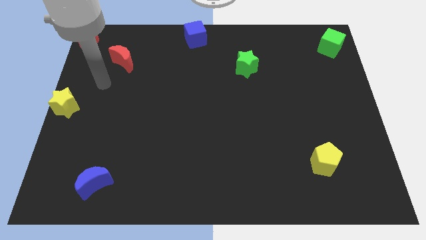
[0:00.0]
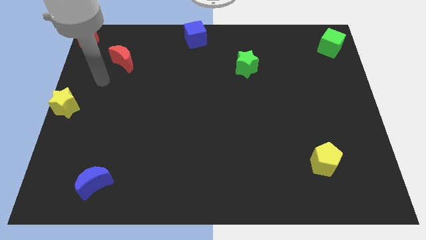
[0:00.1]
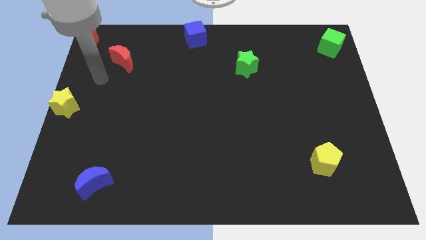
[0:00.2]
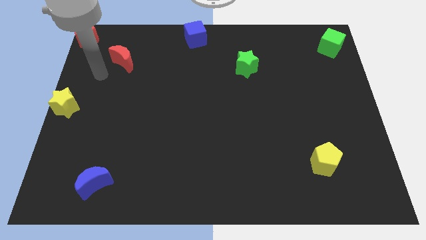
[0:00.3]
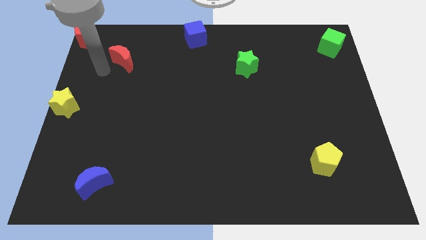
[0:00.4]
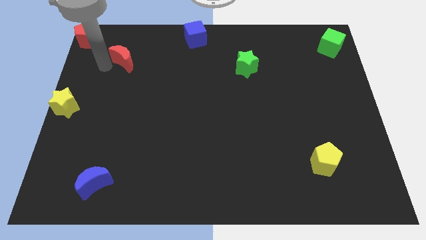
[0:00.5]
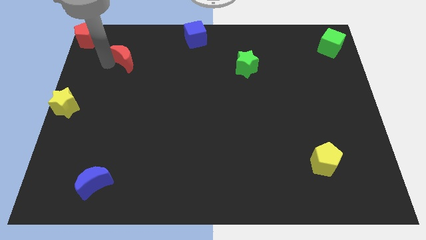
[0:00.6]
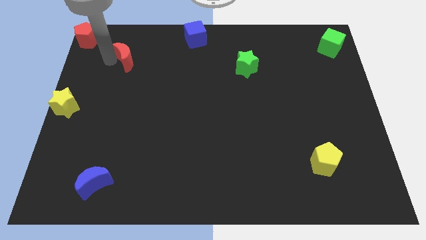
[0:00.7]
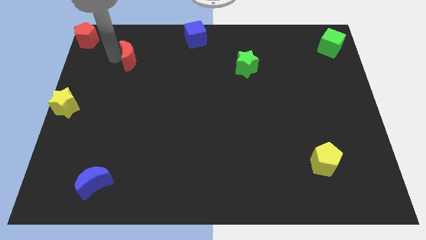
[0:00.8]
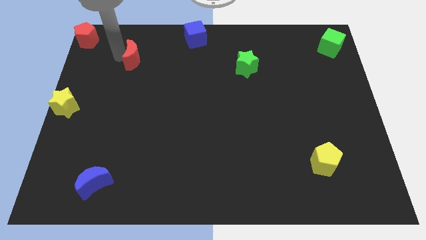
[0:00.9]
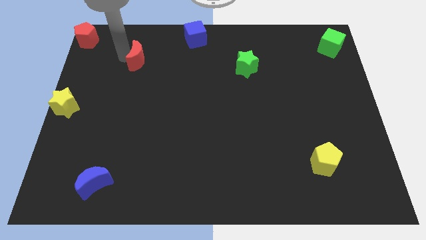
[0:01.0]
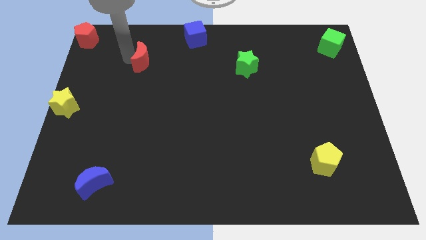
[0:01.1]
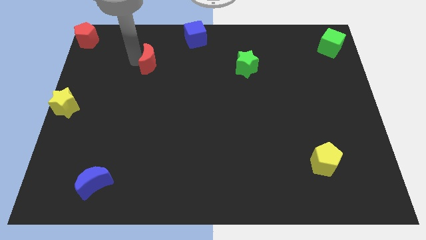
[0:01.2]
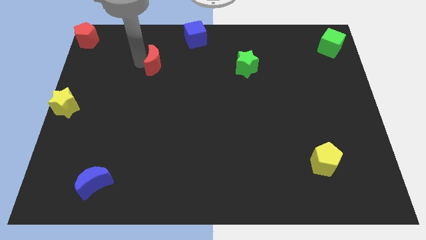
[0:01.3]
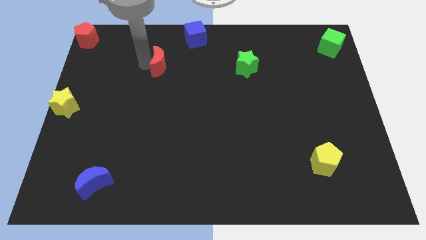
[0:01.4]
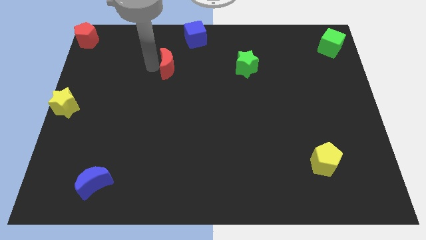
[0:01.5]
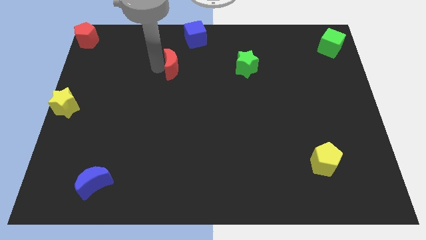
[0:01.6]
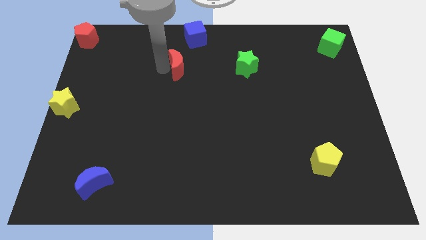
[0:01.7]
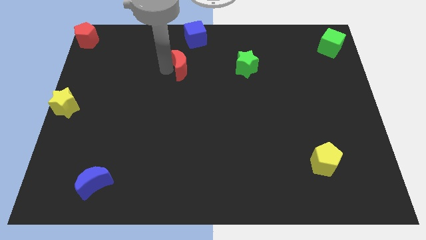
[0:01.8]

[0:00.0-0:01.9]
push the red crescent towards the green star

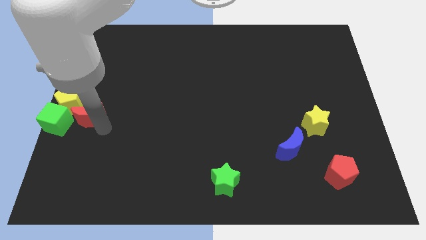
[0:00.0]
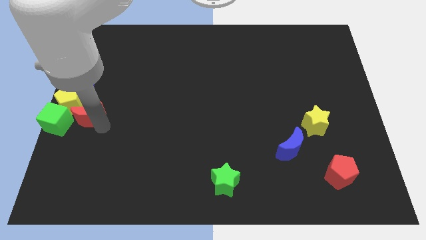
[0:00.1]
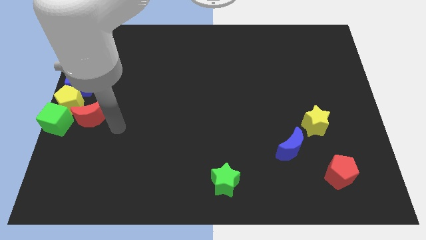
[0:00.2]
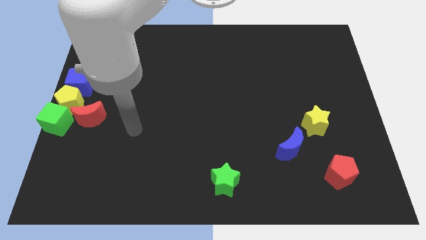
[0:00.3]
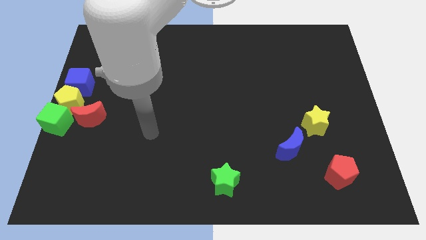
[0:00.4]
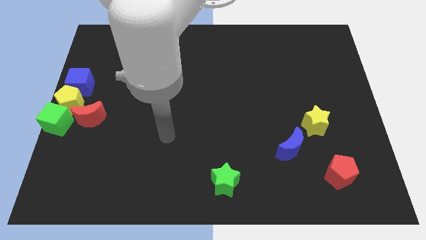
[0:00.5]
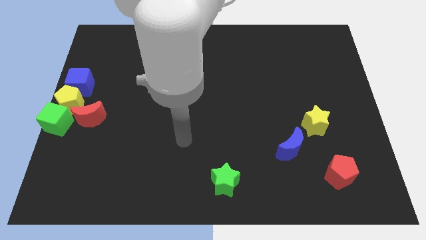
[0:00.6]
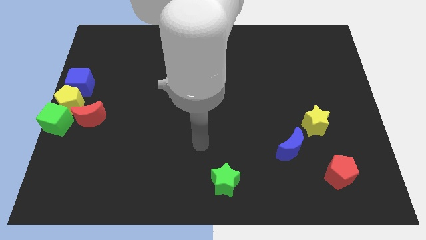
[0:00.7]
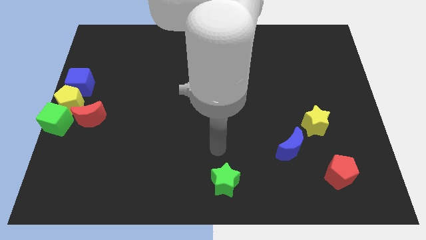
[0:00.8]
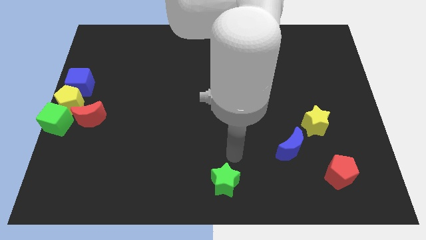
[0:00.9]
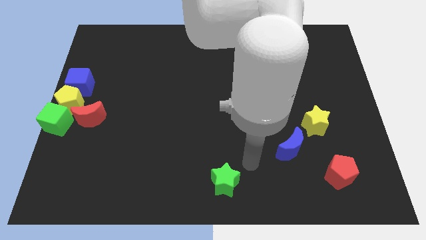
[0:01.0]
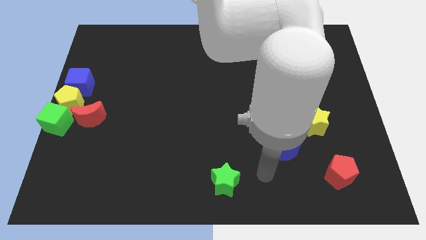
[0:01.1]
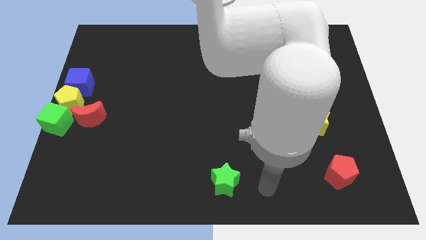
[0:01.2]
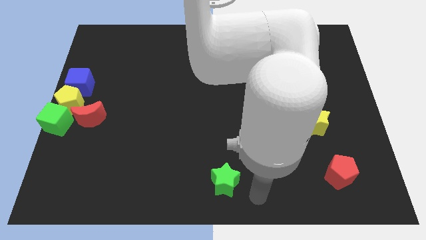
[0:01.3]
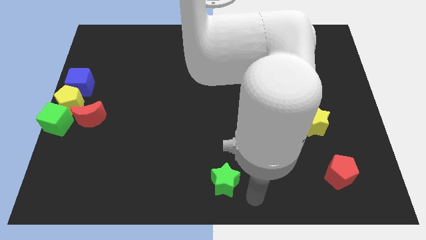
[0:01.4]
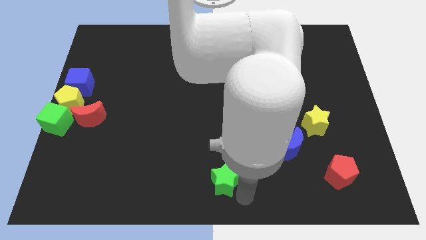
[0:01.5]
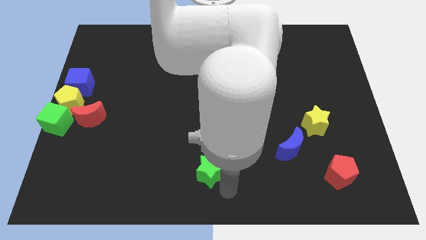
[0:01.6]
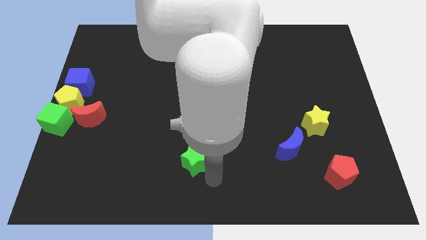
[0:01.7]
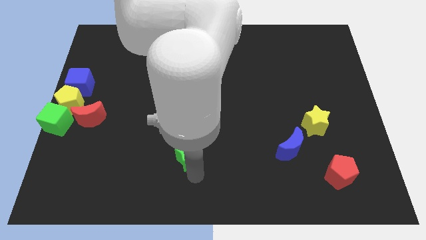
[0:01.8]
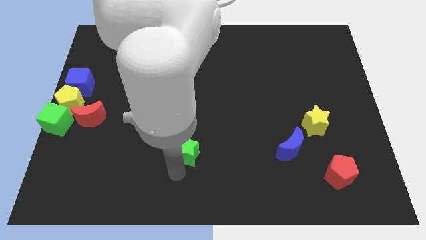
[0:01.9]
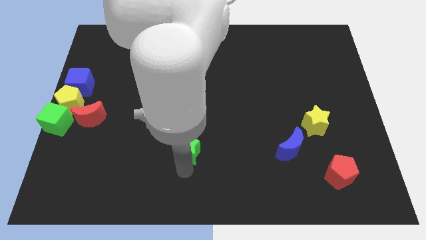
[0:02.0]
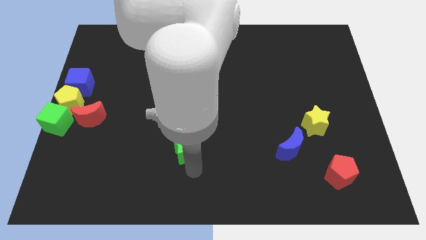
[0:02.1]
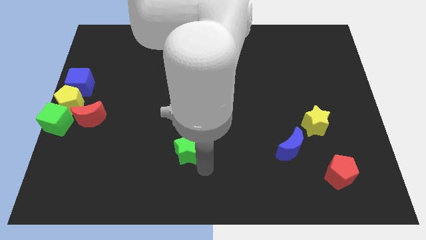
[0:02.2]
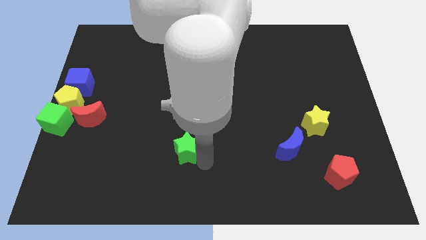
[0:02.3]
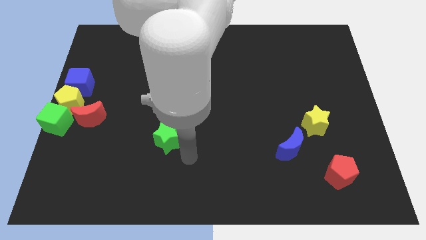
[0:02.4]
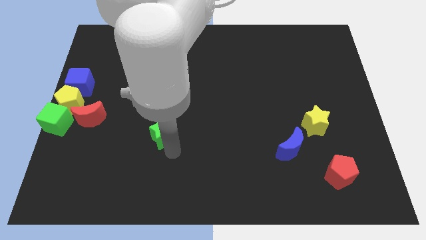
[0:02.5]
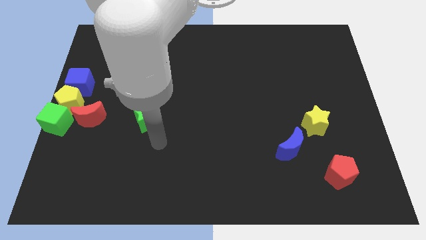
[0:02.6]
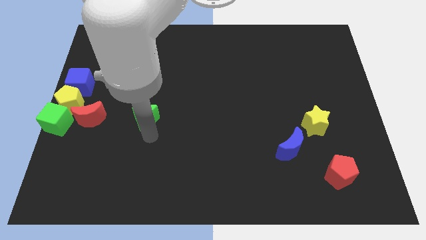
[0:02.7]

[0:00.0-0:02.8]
place green star parallel right to red moon

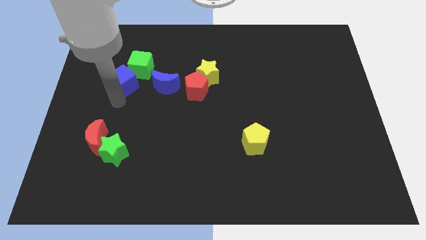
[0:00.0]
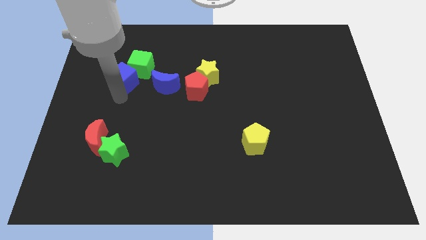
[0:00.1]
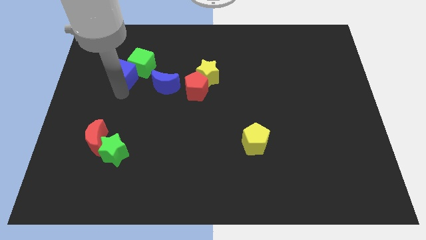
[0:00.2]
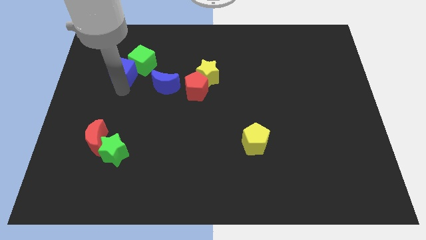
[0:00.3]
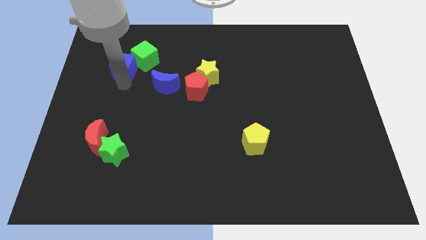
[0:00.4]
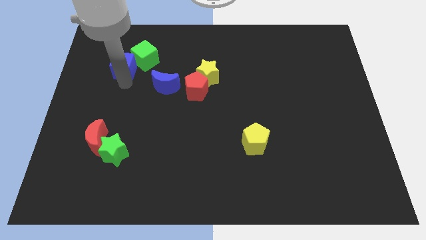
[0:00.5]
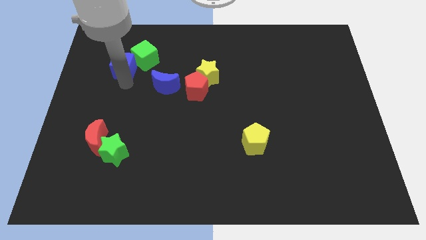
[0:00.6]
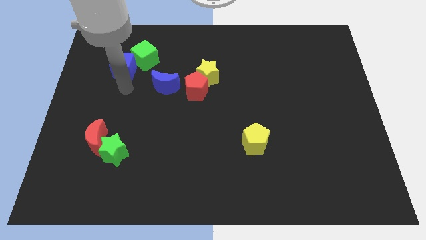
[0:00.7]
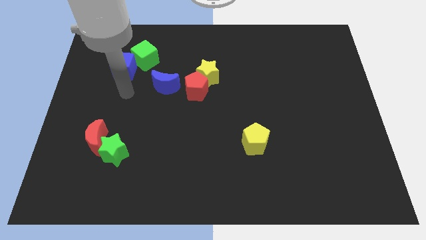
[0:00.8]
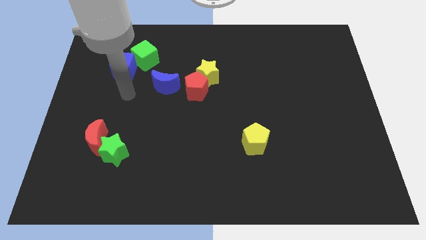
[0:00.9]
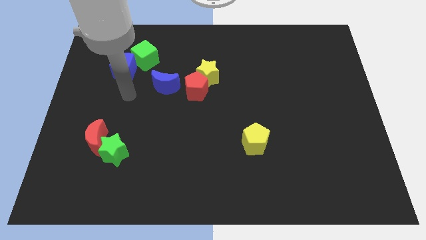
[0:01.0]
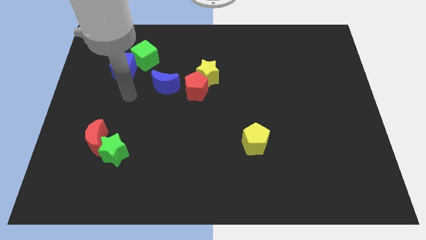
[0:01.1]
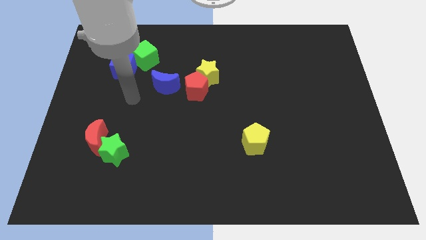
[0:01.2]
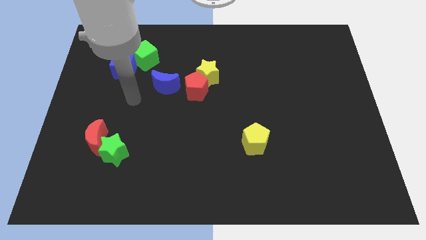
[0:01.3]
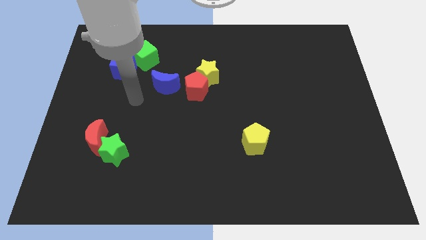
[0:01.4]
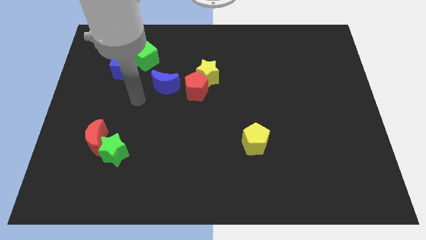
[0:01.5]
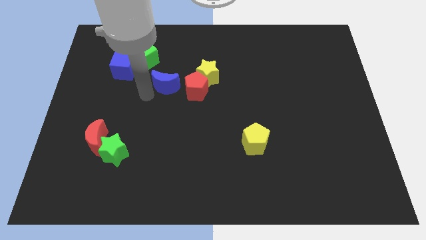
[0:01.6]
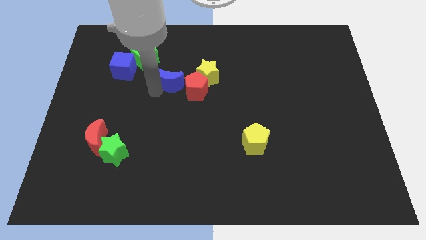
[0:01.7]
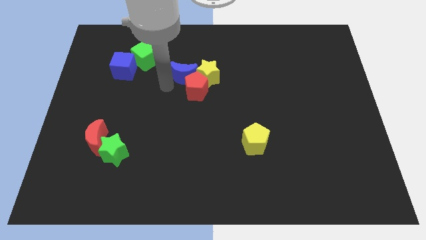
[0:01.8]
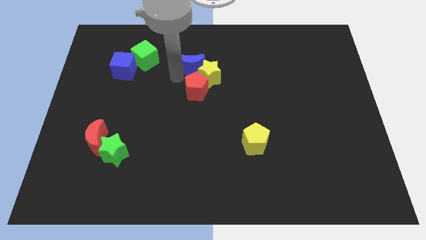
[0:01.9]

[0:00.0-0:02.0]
push the blue crescent towards the top of the board

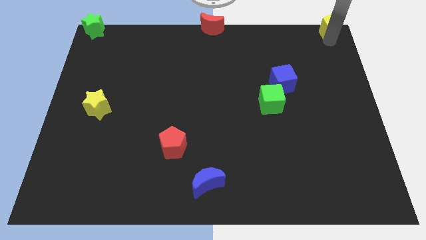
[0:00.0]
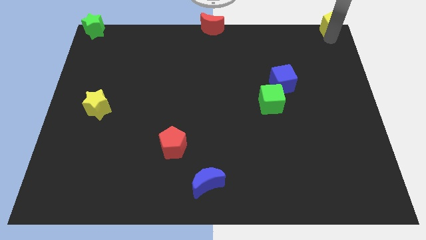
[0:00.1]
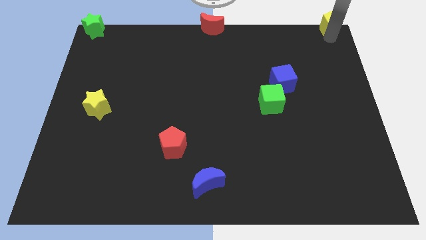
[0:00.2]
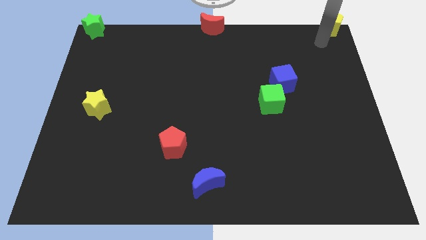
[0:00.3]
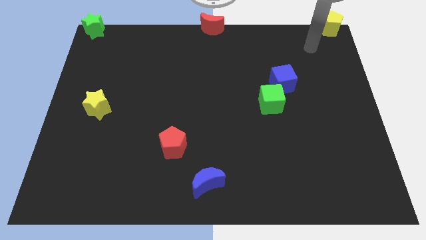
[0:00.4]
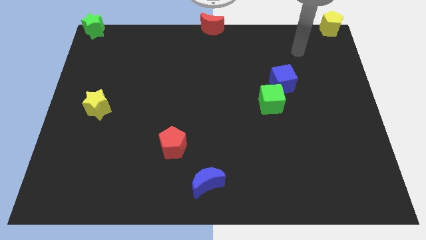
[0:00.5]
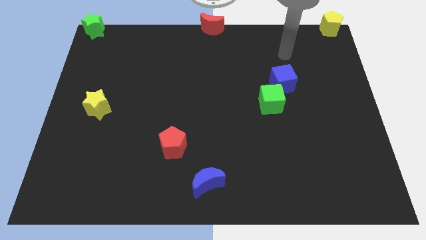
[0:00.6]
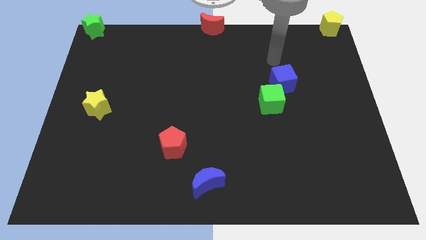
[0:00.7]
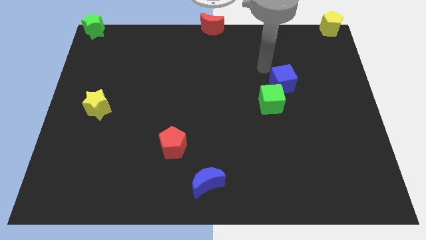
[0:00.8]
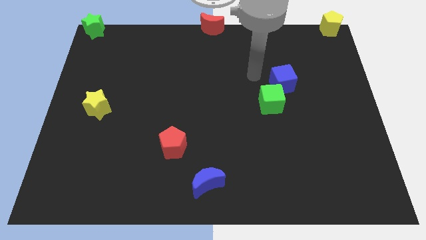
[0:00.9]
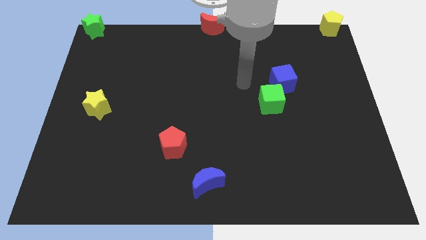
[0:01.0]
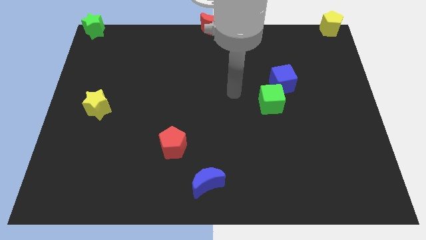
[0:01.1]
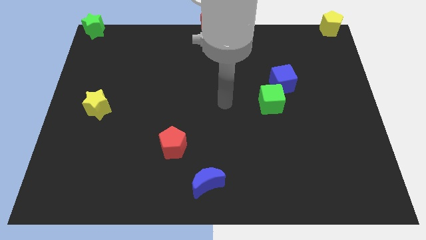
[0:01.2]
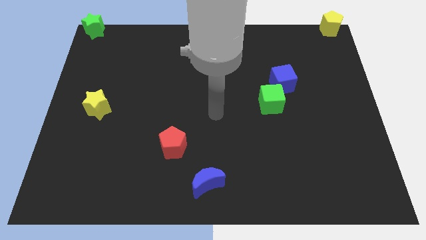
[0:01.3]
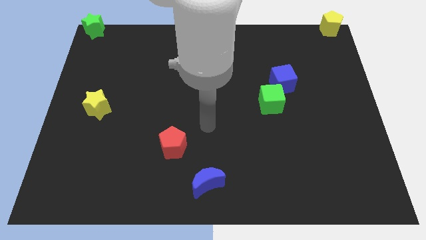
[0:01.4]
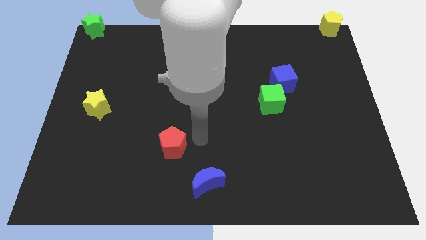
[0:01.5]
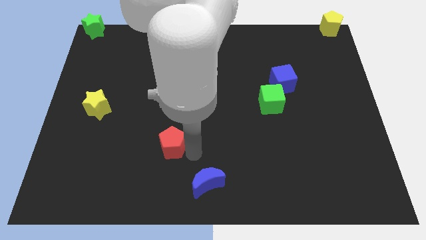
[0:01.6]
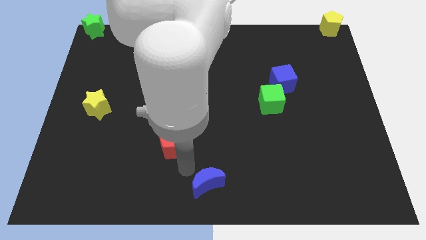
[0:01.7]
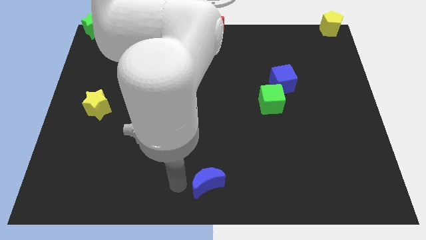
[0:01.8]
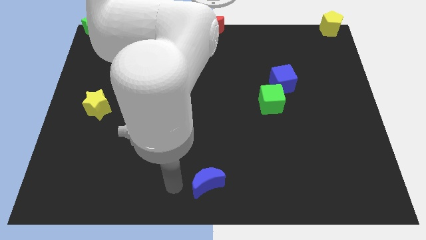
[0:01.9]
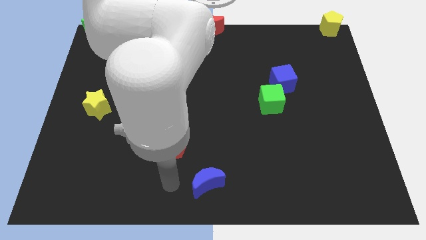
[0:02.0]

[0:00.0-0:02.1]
place the arm towards bottom center of the board
